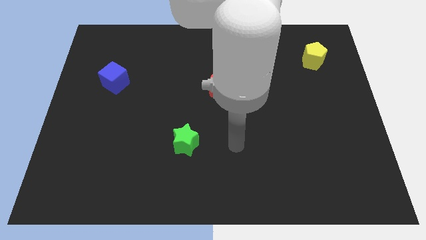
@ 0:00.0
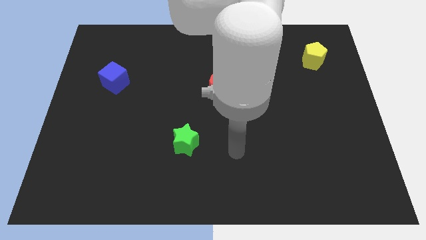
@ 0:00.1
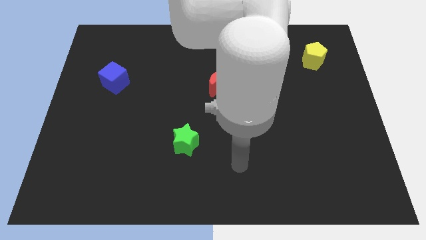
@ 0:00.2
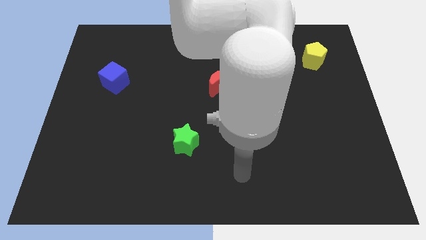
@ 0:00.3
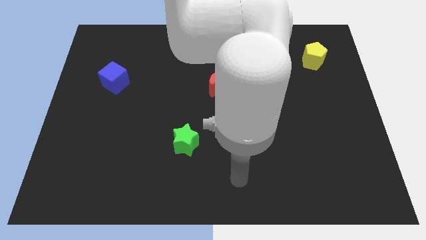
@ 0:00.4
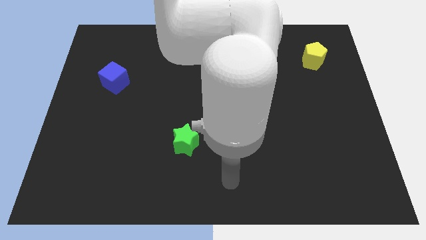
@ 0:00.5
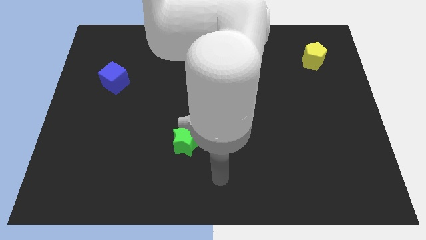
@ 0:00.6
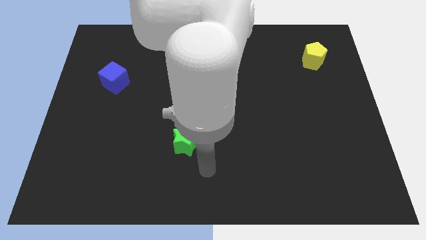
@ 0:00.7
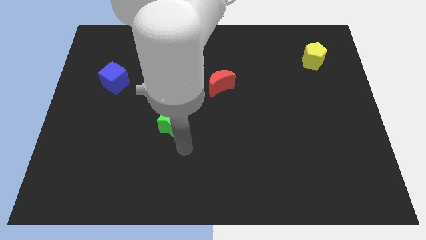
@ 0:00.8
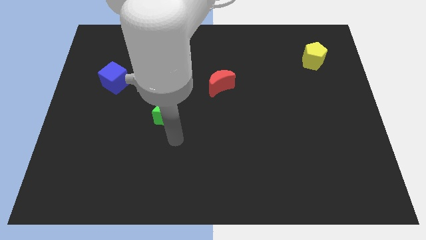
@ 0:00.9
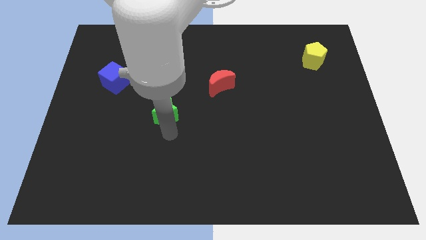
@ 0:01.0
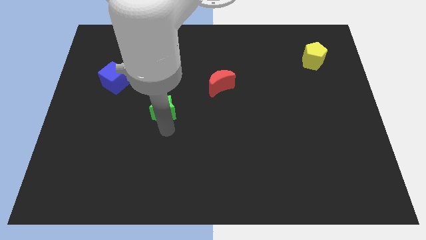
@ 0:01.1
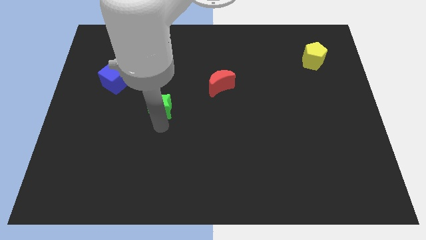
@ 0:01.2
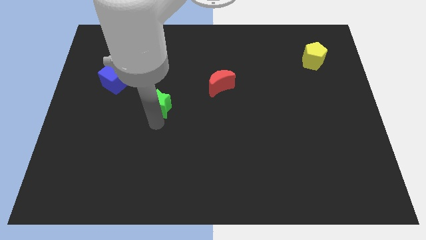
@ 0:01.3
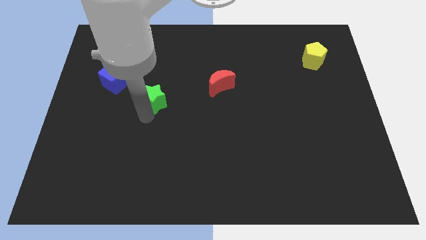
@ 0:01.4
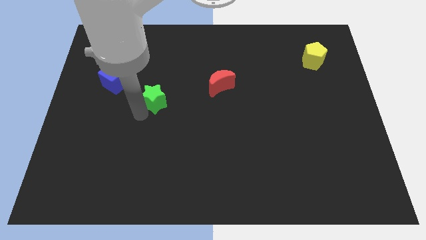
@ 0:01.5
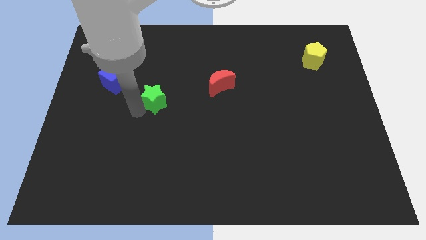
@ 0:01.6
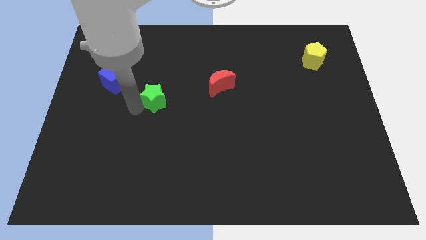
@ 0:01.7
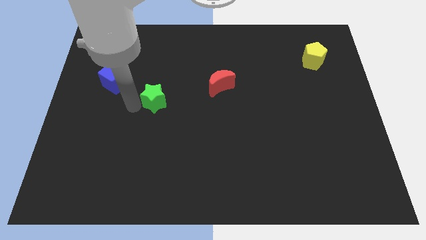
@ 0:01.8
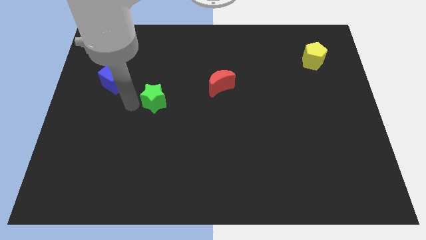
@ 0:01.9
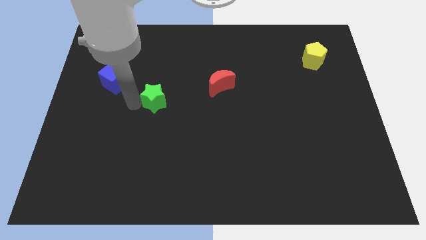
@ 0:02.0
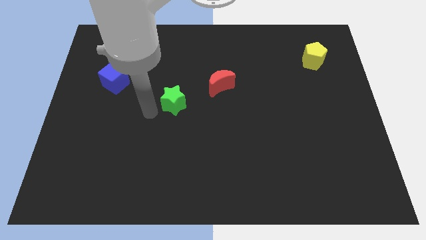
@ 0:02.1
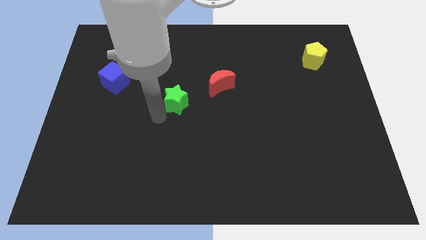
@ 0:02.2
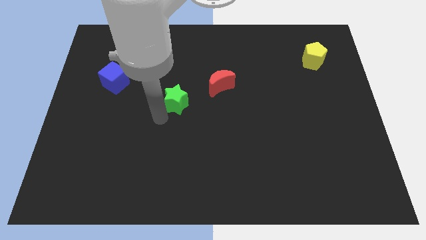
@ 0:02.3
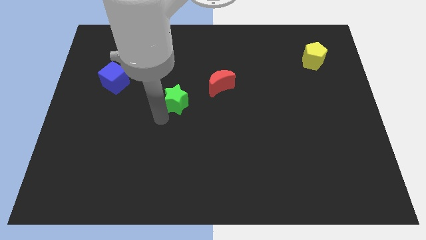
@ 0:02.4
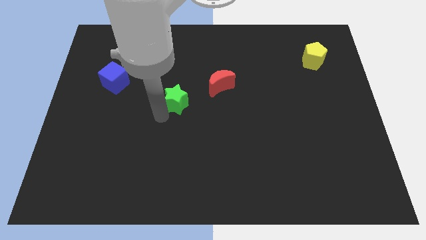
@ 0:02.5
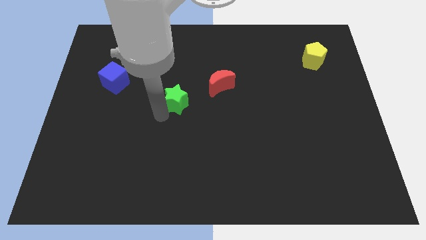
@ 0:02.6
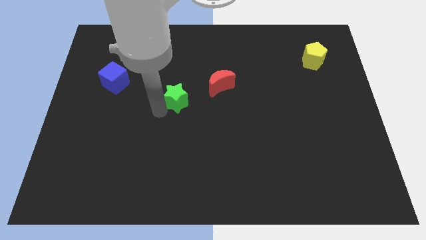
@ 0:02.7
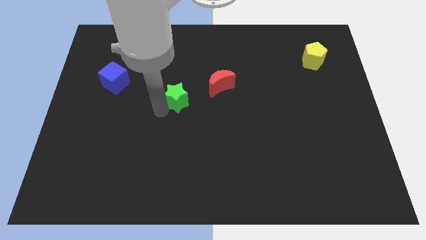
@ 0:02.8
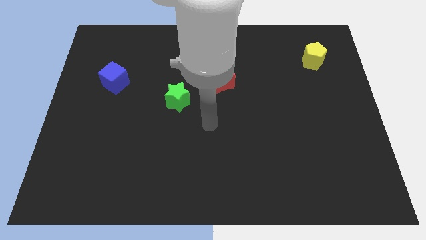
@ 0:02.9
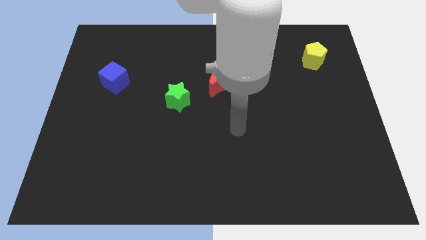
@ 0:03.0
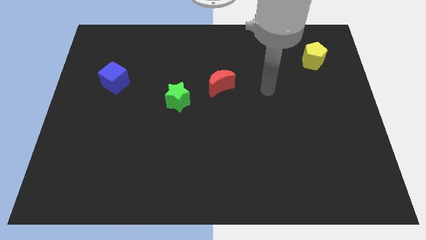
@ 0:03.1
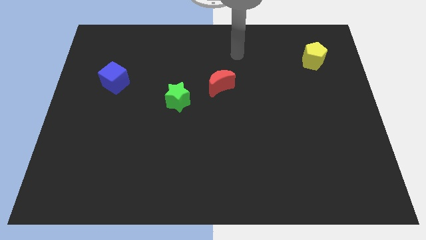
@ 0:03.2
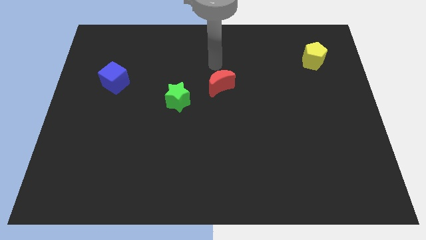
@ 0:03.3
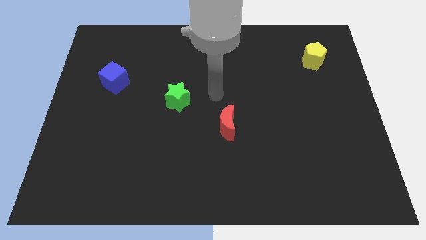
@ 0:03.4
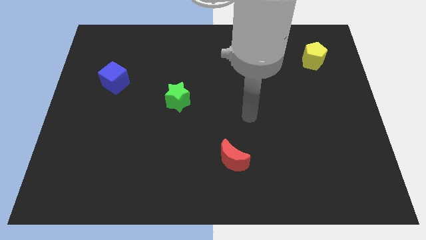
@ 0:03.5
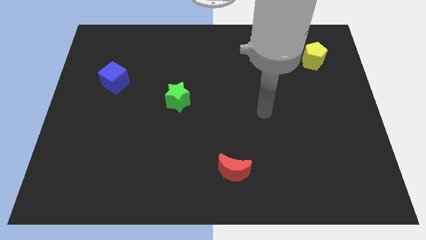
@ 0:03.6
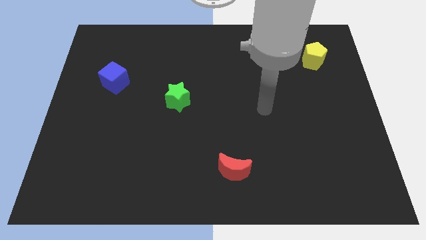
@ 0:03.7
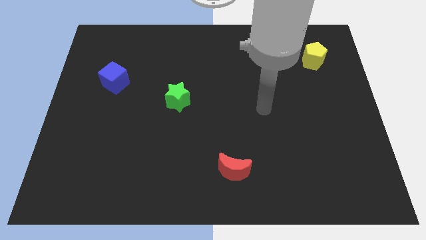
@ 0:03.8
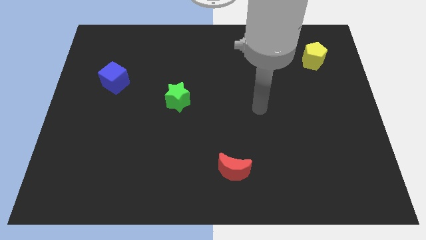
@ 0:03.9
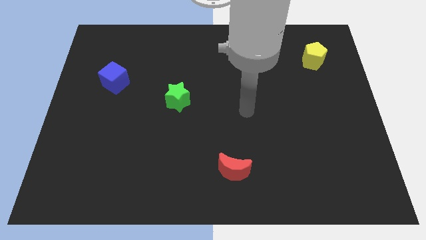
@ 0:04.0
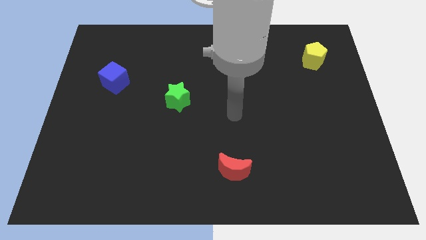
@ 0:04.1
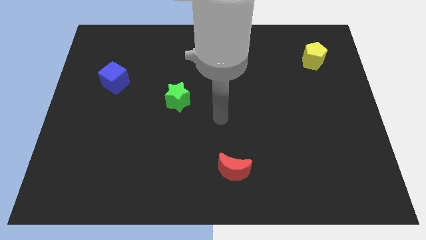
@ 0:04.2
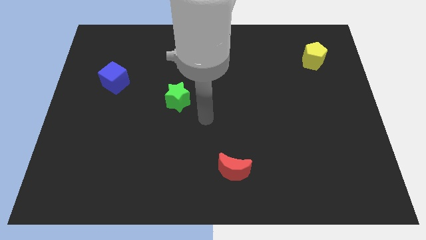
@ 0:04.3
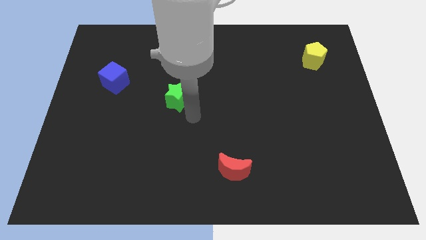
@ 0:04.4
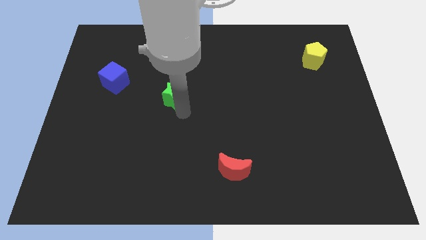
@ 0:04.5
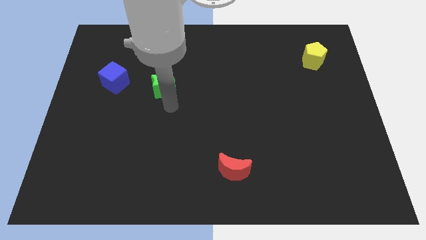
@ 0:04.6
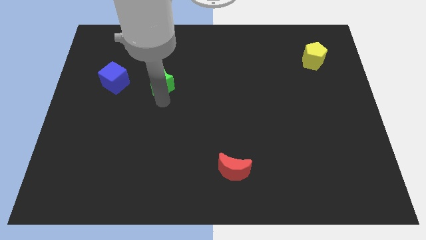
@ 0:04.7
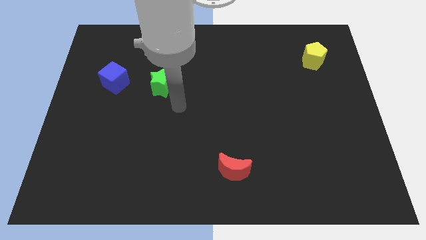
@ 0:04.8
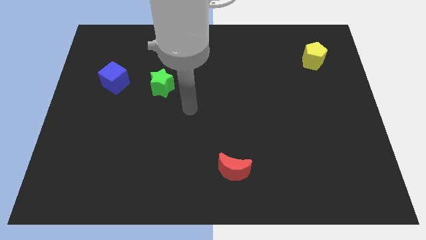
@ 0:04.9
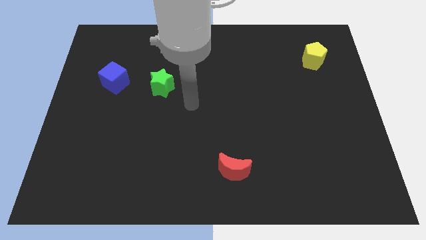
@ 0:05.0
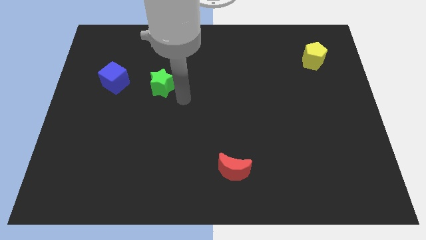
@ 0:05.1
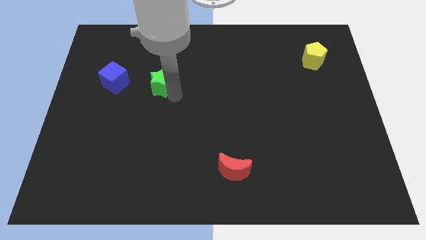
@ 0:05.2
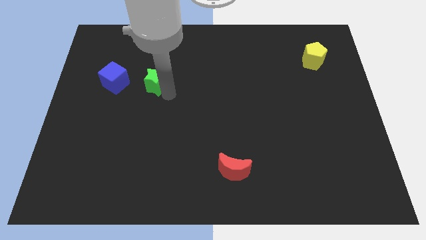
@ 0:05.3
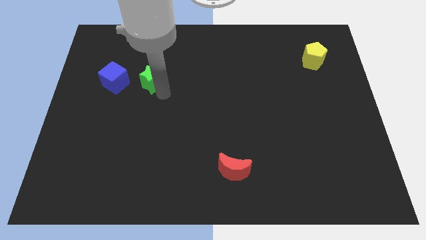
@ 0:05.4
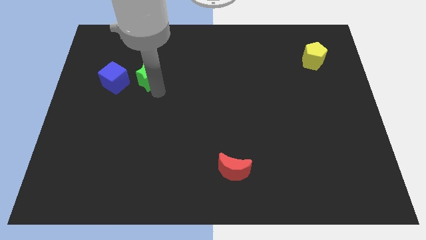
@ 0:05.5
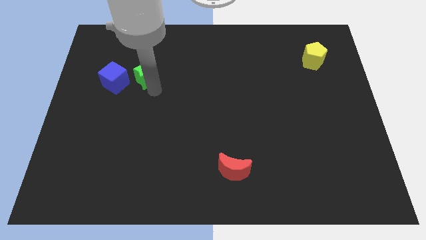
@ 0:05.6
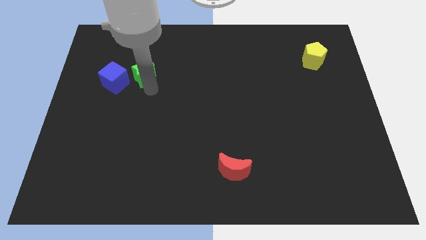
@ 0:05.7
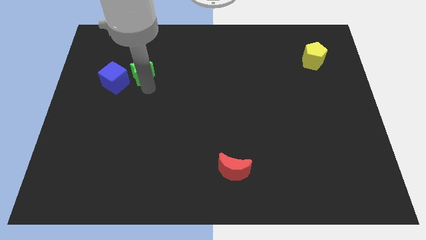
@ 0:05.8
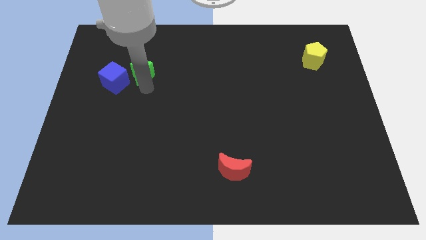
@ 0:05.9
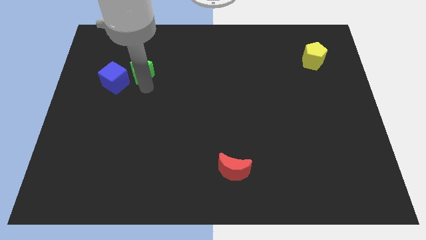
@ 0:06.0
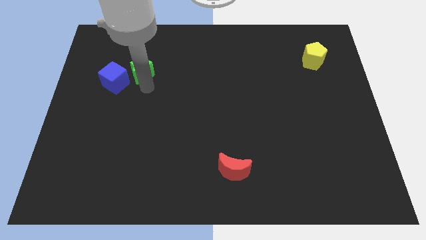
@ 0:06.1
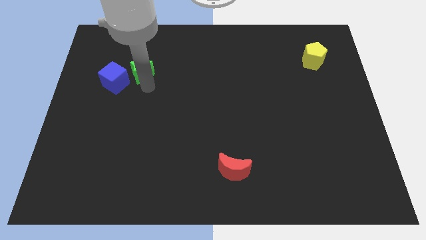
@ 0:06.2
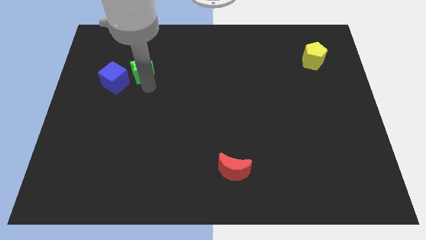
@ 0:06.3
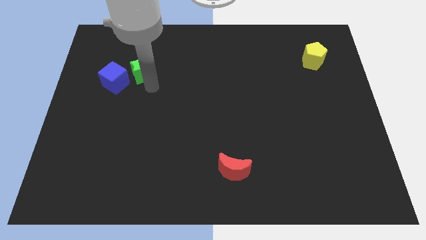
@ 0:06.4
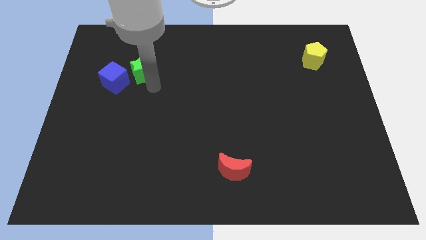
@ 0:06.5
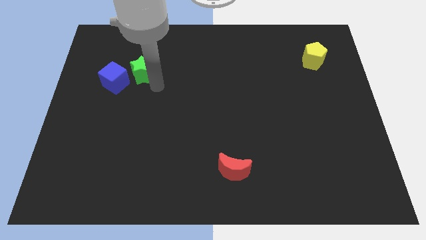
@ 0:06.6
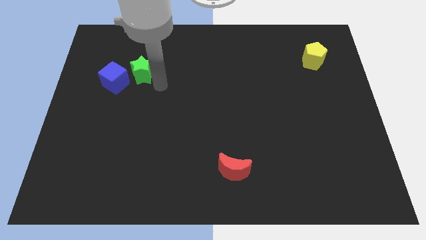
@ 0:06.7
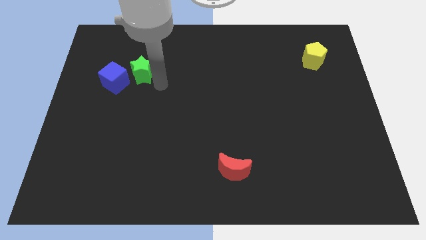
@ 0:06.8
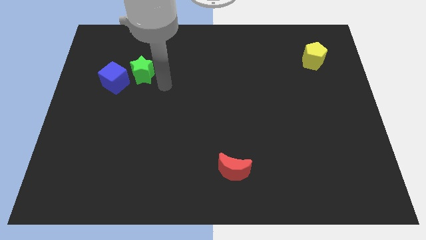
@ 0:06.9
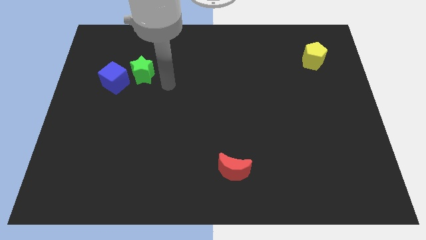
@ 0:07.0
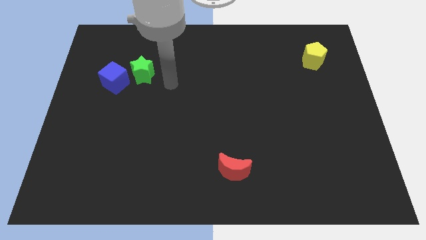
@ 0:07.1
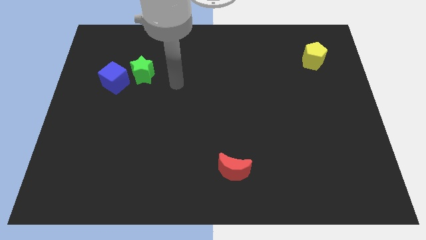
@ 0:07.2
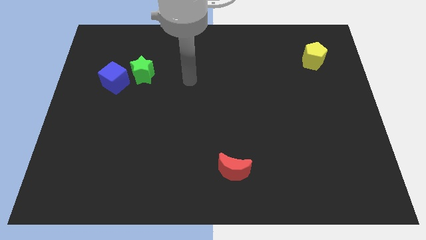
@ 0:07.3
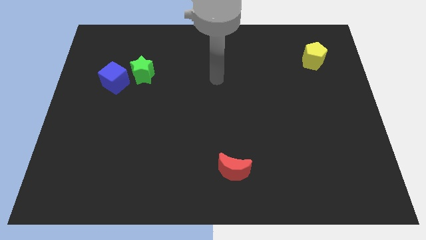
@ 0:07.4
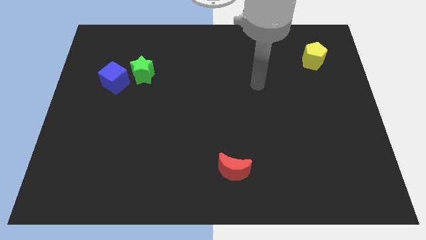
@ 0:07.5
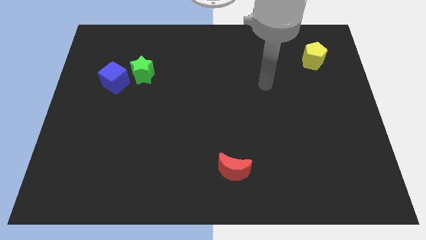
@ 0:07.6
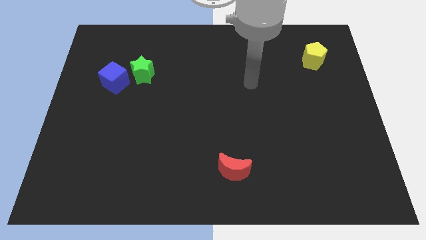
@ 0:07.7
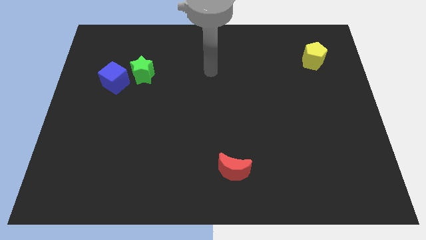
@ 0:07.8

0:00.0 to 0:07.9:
move the star towards the blue cube

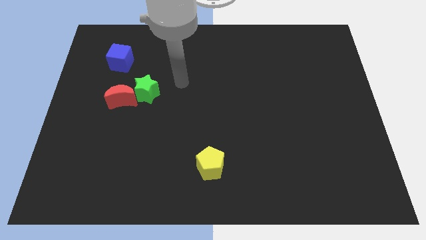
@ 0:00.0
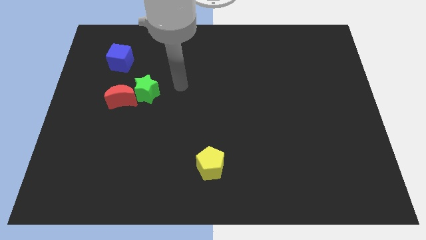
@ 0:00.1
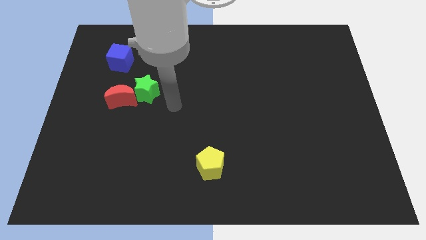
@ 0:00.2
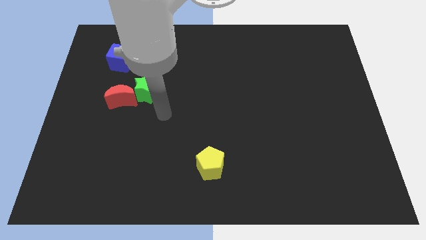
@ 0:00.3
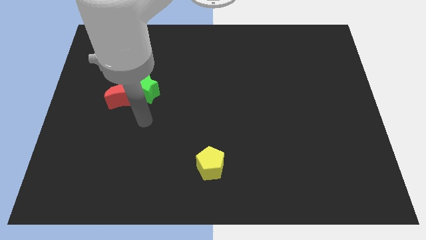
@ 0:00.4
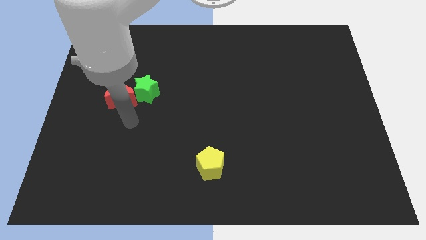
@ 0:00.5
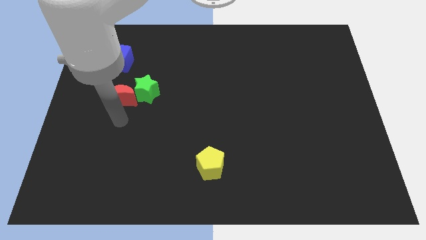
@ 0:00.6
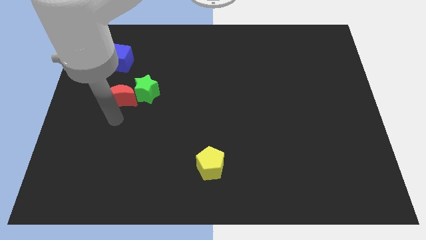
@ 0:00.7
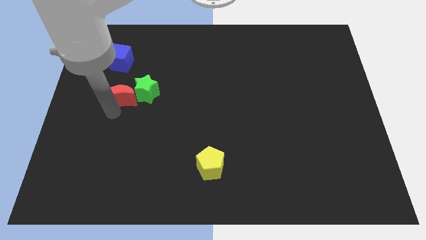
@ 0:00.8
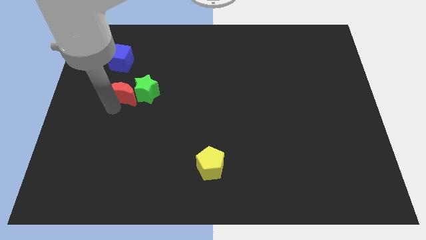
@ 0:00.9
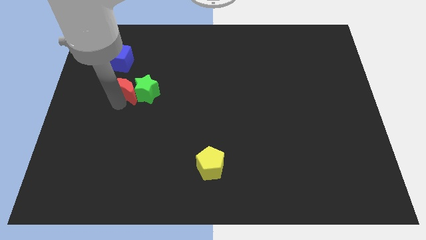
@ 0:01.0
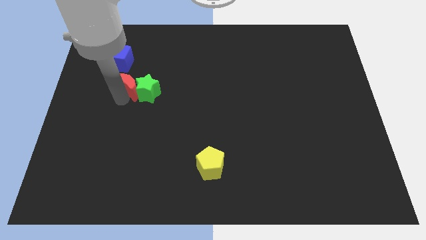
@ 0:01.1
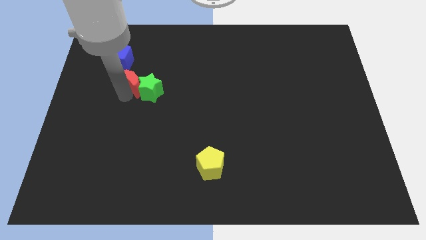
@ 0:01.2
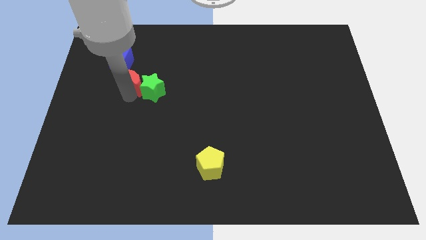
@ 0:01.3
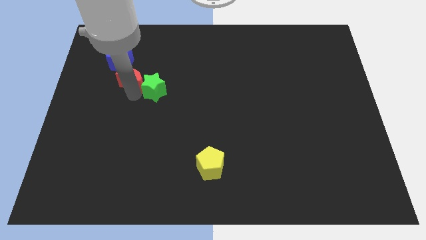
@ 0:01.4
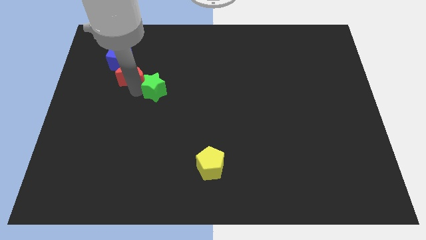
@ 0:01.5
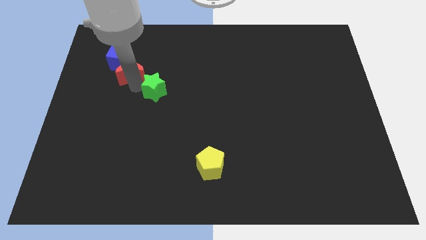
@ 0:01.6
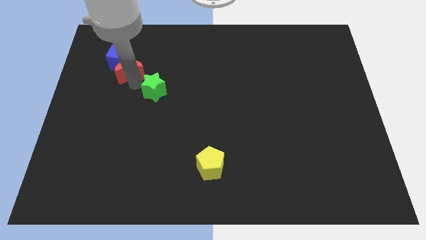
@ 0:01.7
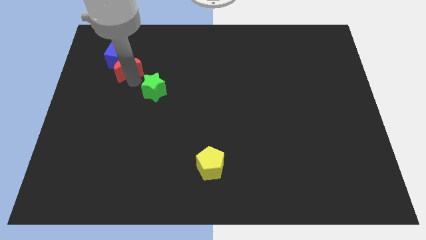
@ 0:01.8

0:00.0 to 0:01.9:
slide the red moon next to the cube
